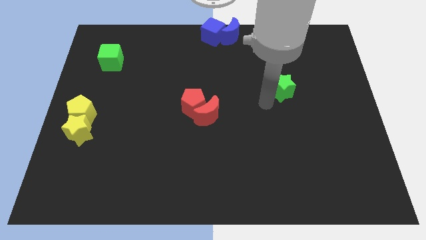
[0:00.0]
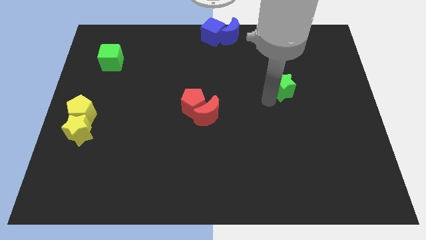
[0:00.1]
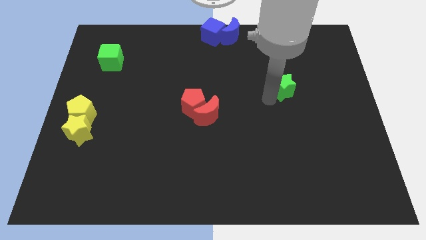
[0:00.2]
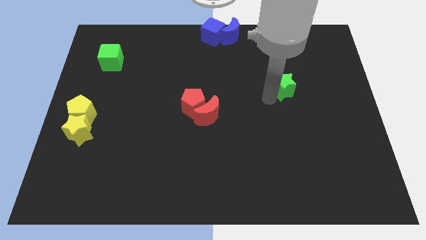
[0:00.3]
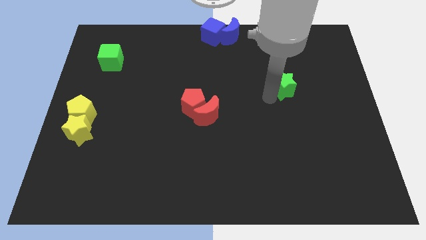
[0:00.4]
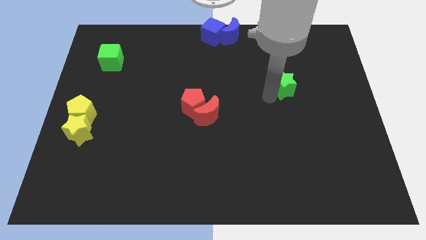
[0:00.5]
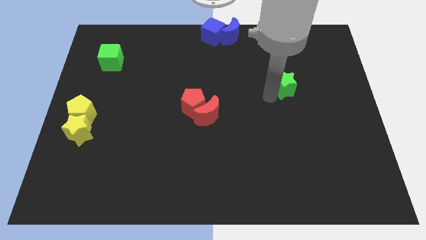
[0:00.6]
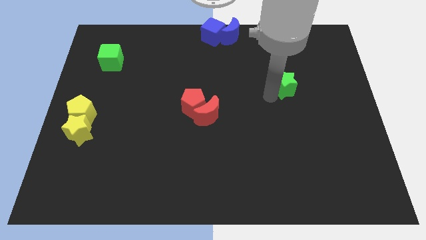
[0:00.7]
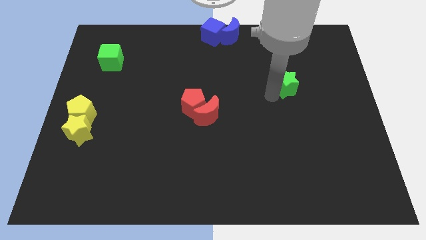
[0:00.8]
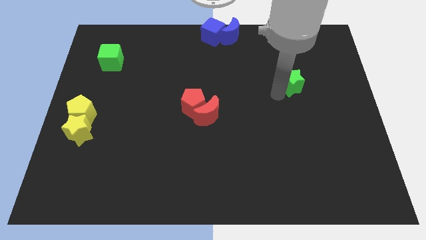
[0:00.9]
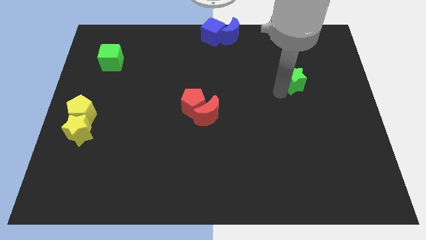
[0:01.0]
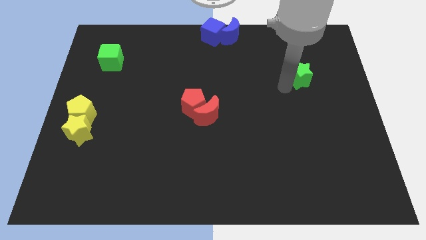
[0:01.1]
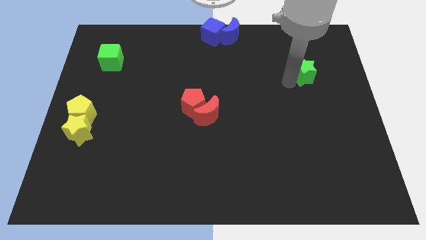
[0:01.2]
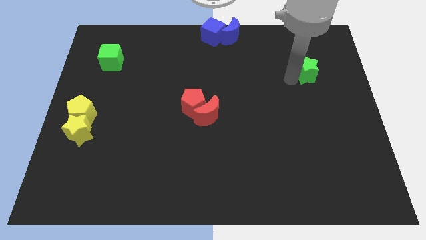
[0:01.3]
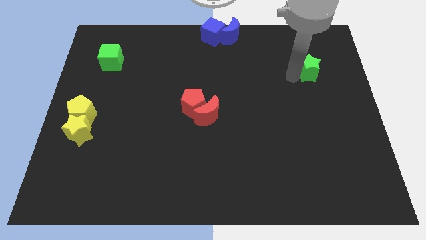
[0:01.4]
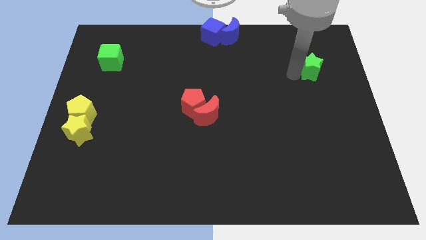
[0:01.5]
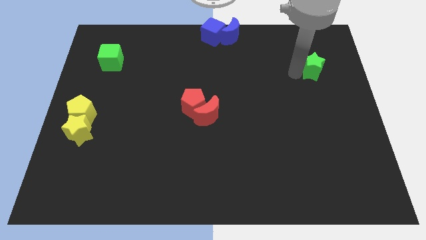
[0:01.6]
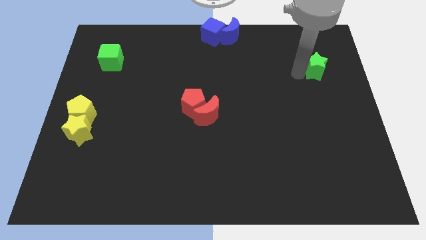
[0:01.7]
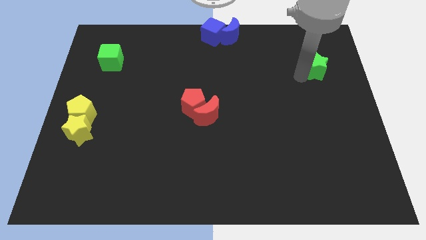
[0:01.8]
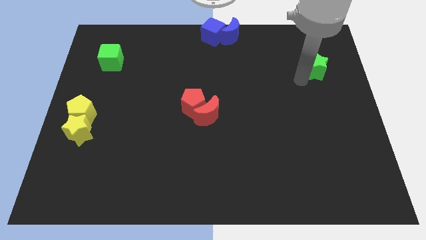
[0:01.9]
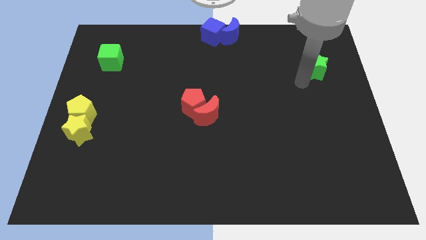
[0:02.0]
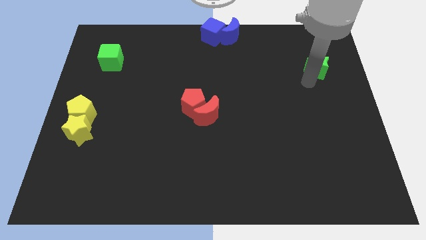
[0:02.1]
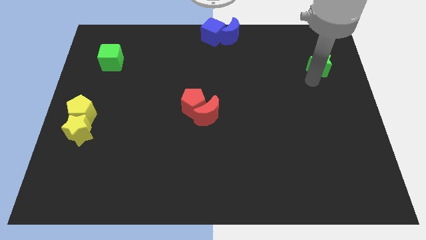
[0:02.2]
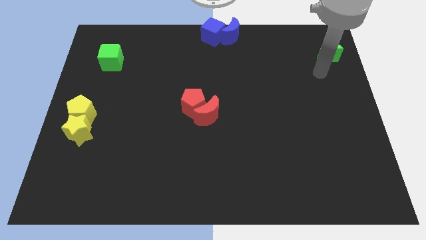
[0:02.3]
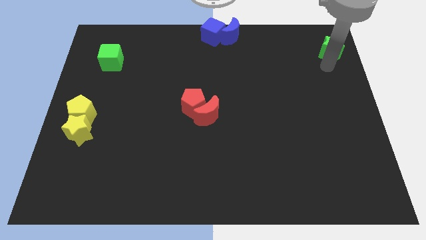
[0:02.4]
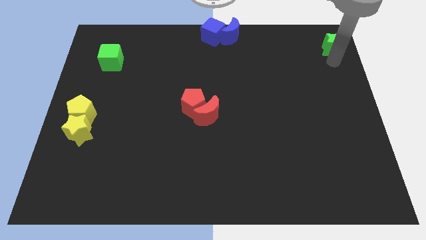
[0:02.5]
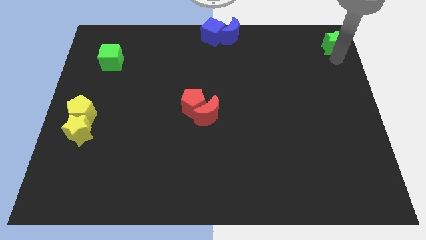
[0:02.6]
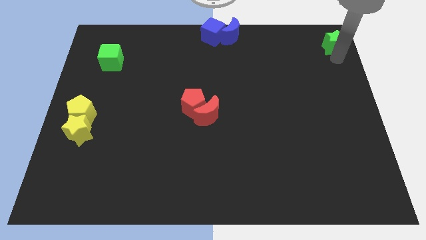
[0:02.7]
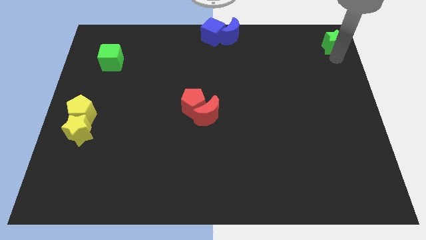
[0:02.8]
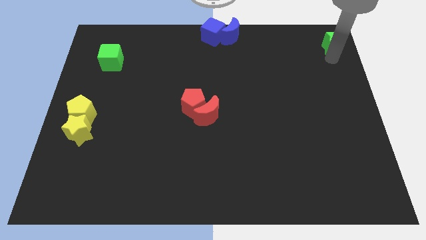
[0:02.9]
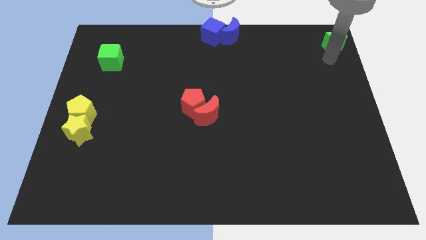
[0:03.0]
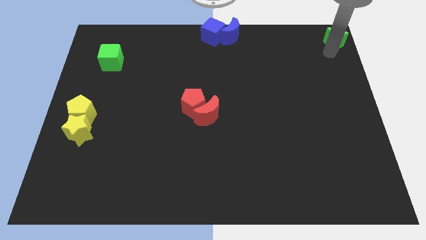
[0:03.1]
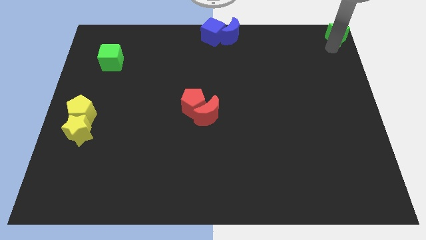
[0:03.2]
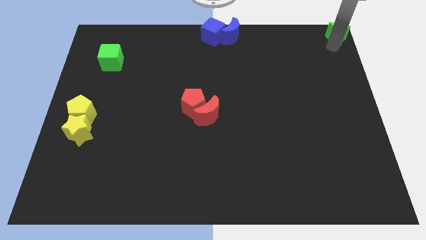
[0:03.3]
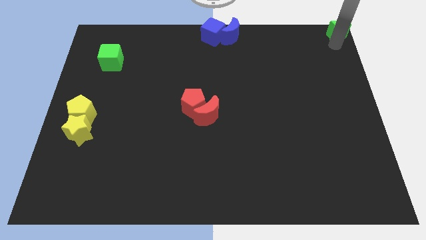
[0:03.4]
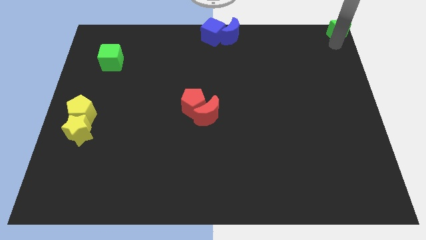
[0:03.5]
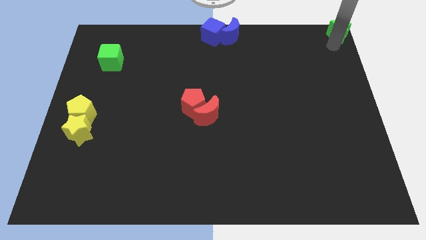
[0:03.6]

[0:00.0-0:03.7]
push the green star to the top right corner

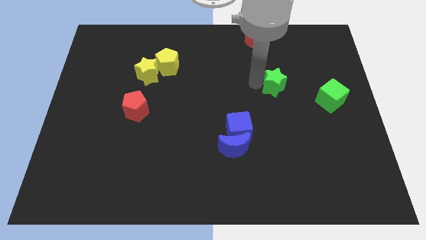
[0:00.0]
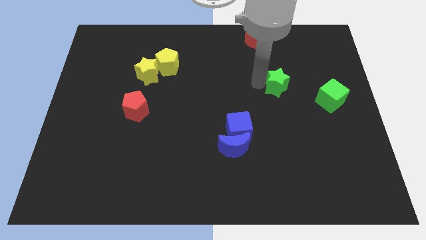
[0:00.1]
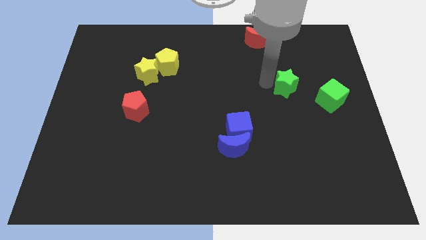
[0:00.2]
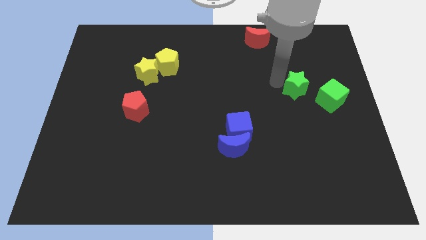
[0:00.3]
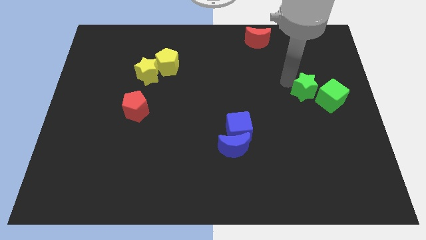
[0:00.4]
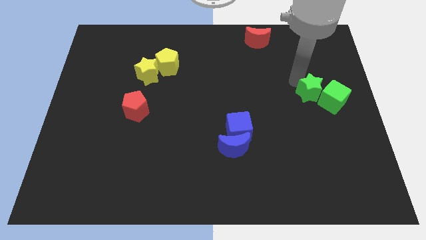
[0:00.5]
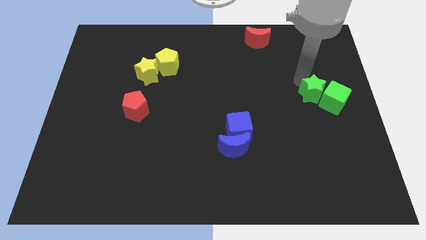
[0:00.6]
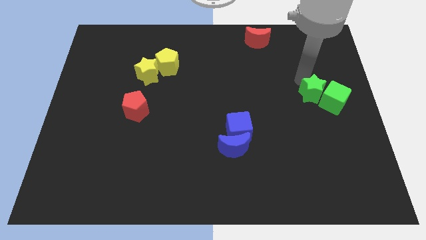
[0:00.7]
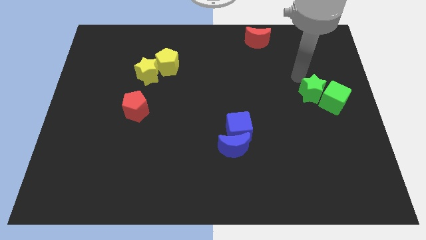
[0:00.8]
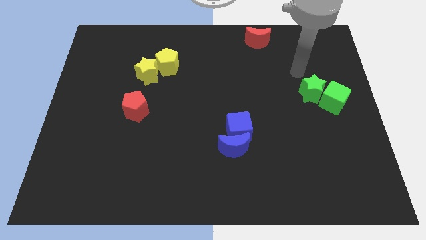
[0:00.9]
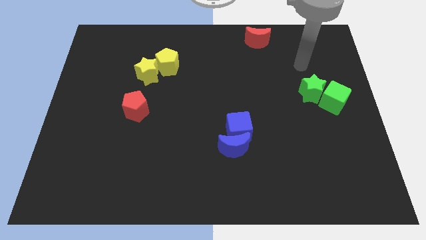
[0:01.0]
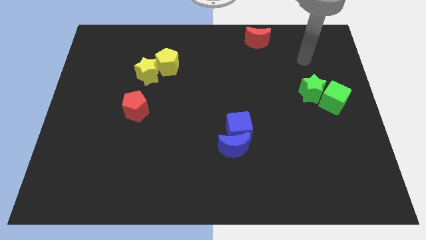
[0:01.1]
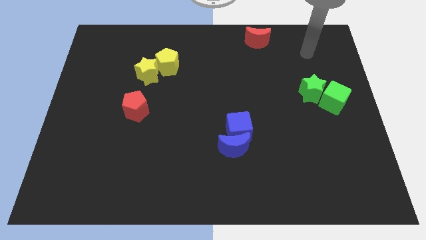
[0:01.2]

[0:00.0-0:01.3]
put the green star into the green cube

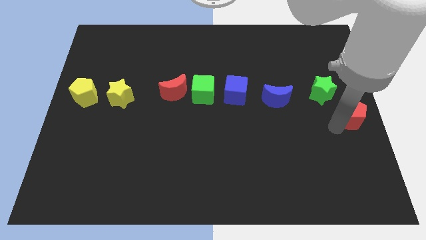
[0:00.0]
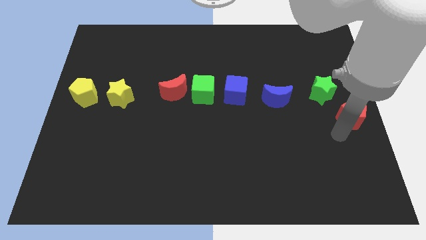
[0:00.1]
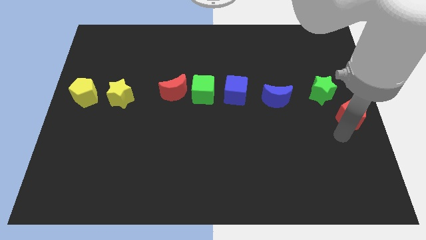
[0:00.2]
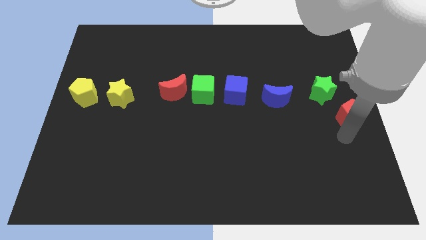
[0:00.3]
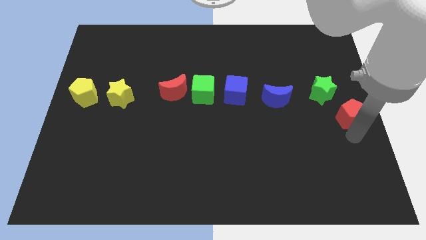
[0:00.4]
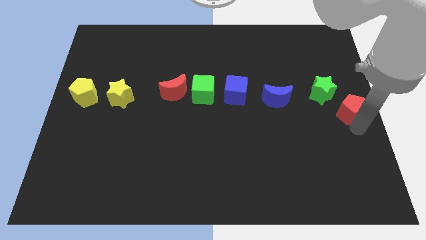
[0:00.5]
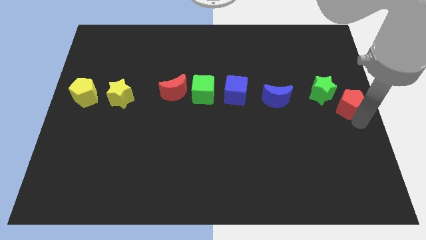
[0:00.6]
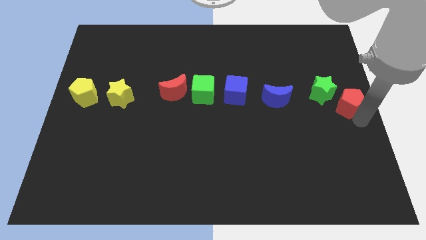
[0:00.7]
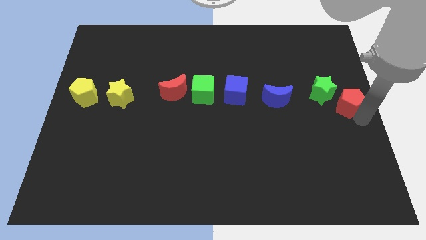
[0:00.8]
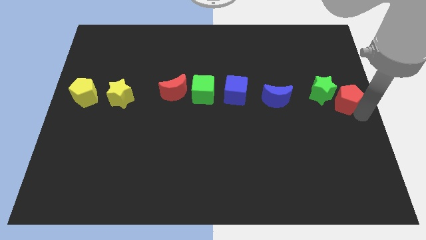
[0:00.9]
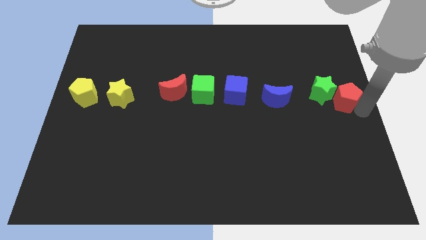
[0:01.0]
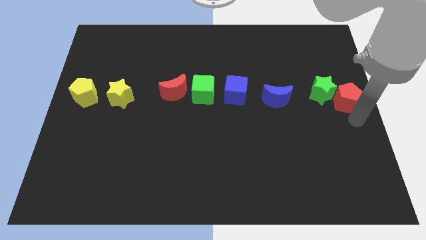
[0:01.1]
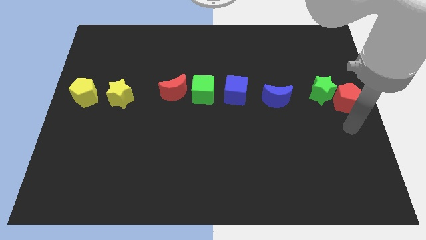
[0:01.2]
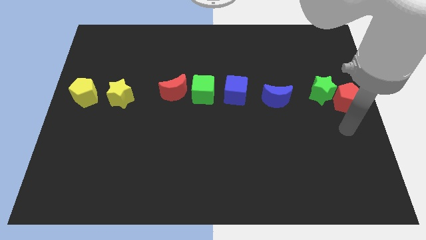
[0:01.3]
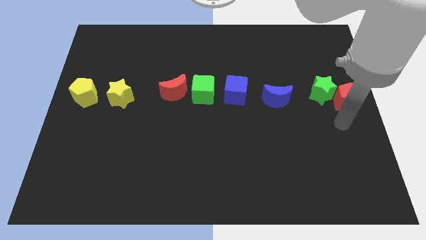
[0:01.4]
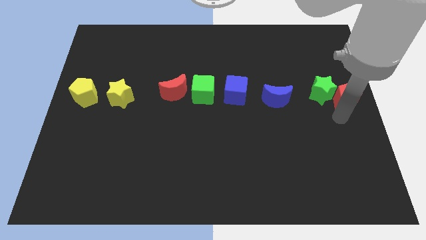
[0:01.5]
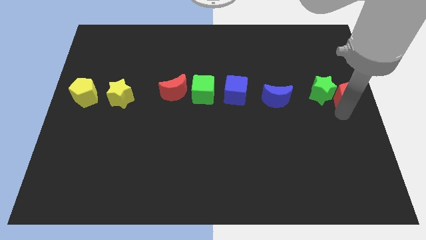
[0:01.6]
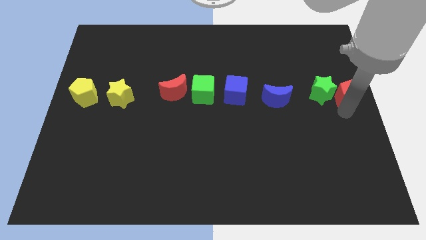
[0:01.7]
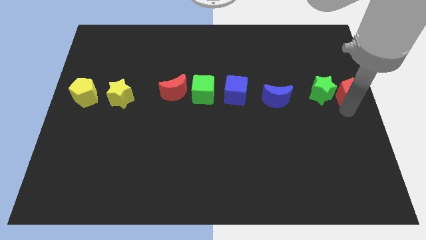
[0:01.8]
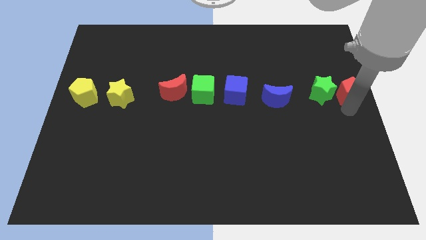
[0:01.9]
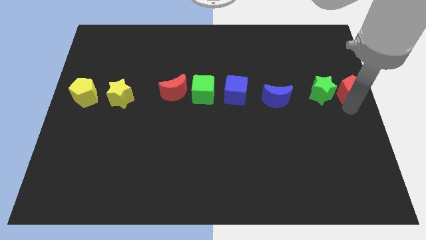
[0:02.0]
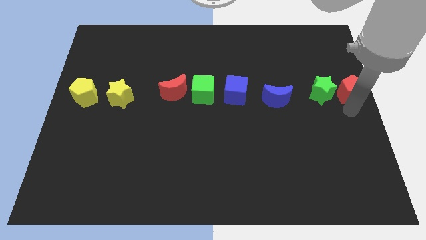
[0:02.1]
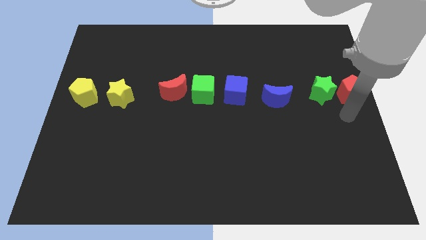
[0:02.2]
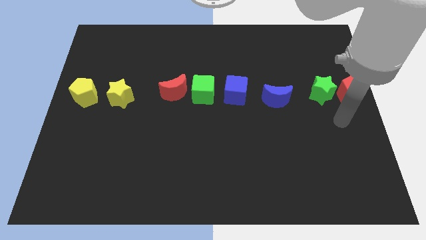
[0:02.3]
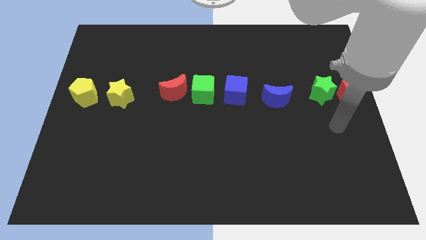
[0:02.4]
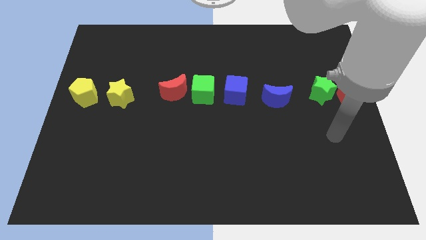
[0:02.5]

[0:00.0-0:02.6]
place the red pentagon right to the green star

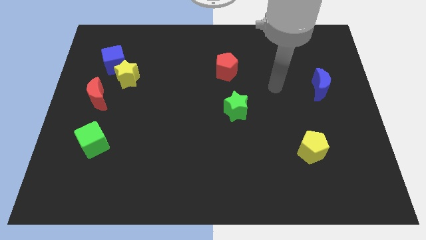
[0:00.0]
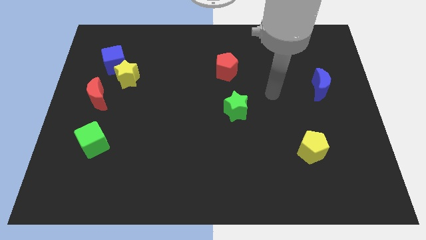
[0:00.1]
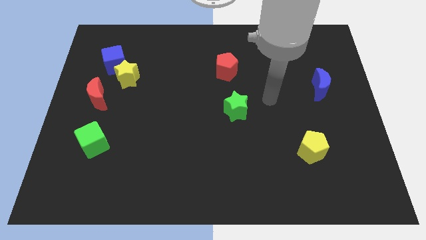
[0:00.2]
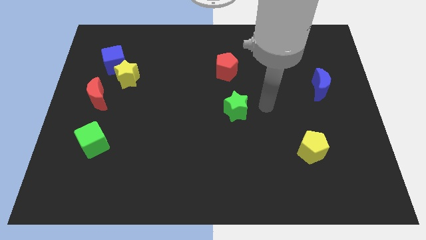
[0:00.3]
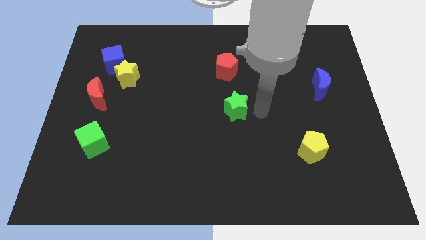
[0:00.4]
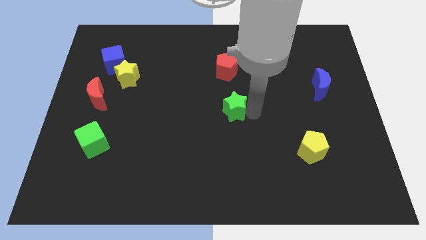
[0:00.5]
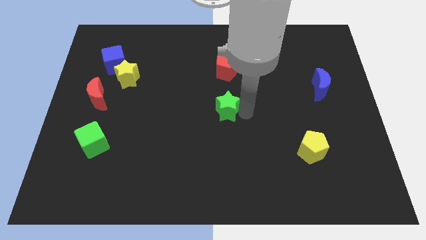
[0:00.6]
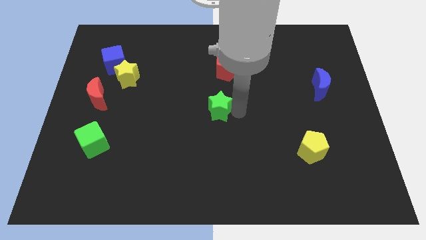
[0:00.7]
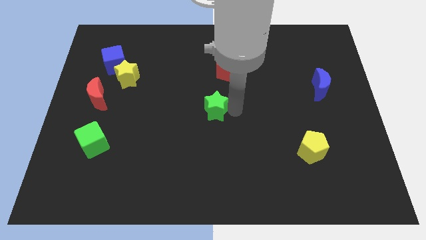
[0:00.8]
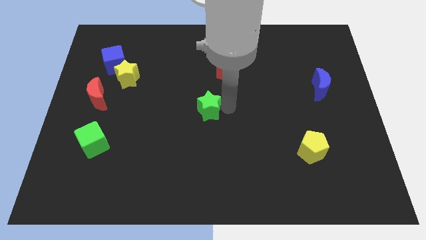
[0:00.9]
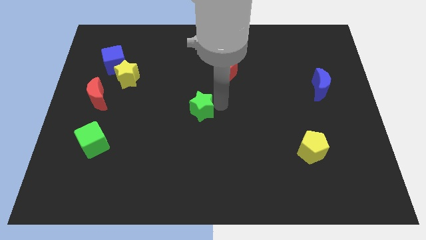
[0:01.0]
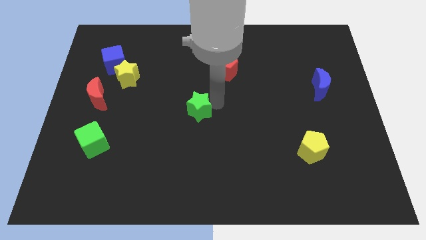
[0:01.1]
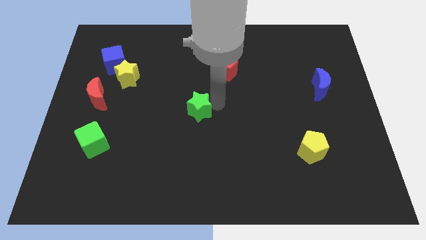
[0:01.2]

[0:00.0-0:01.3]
slightly push the green star towards the left
